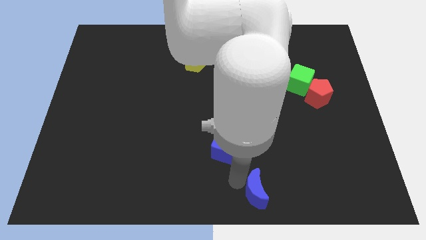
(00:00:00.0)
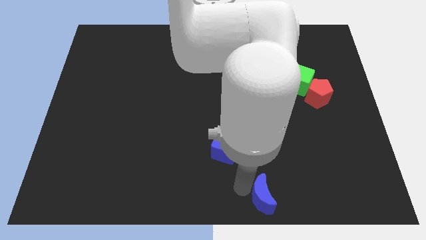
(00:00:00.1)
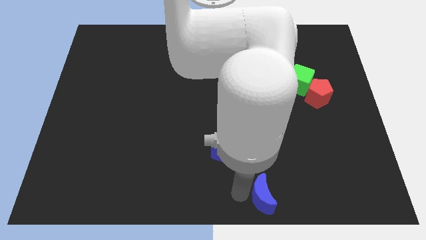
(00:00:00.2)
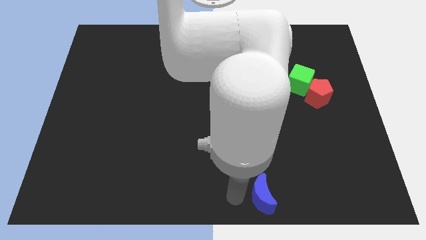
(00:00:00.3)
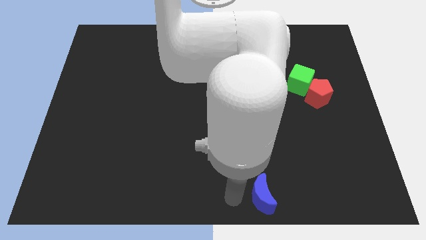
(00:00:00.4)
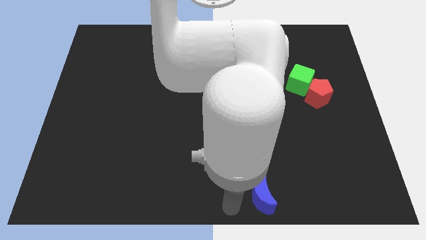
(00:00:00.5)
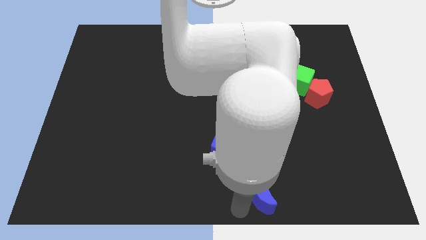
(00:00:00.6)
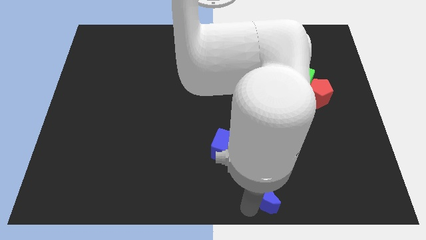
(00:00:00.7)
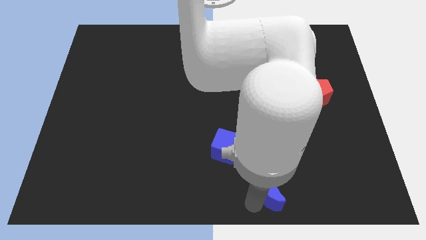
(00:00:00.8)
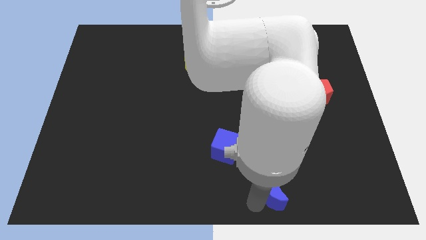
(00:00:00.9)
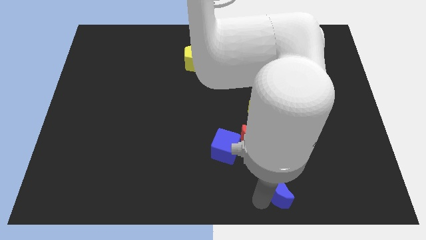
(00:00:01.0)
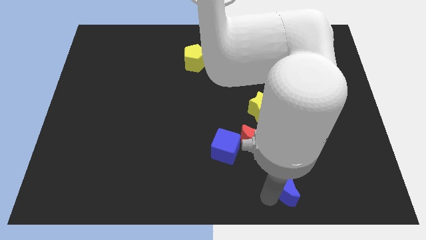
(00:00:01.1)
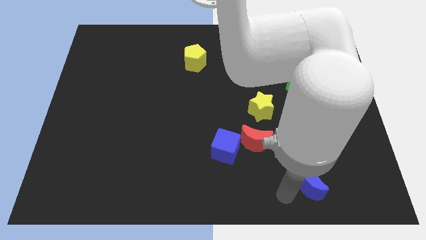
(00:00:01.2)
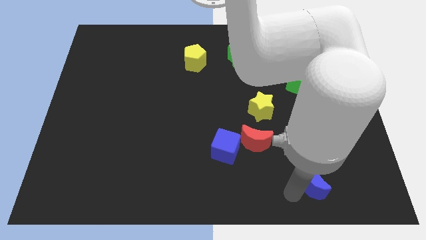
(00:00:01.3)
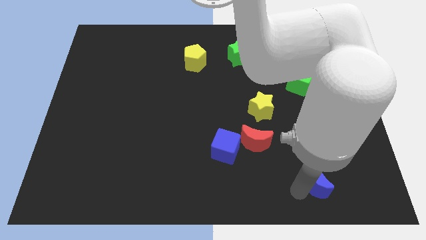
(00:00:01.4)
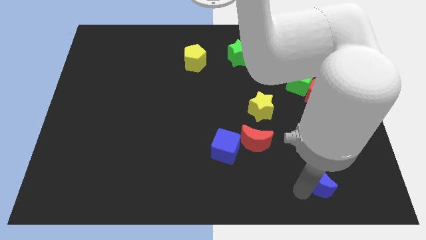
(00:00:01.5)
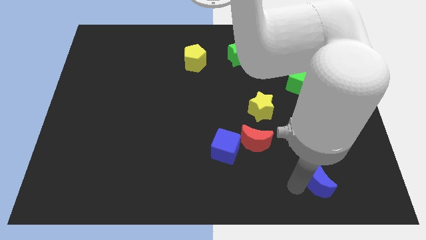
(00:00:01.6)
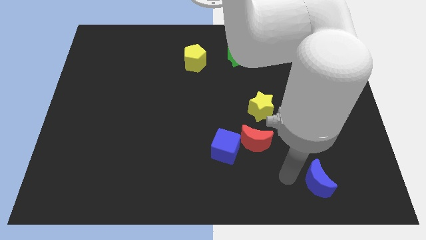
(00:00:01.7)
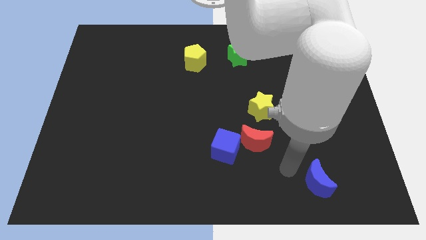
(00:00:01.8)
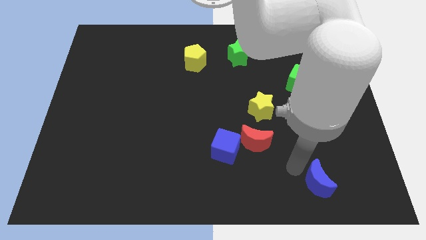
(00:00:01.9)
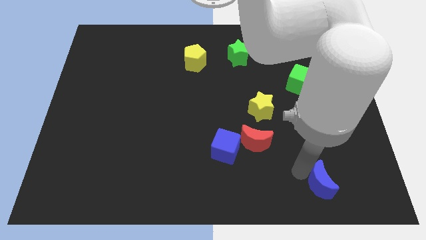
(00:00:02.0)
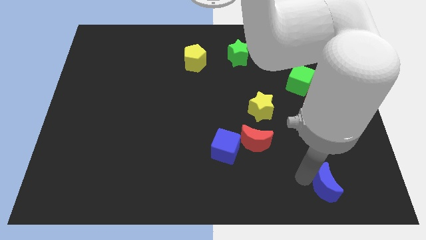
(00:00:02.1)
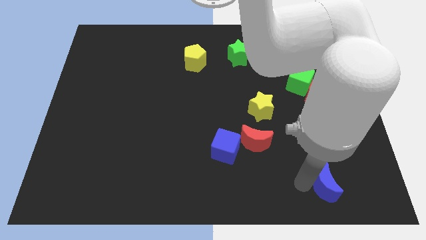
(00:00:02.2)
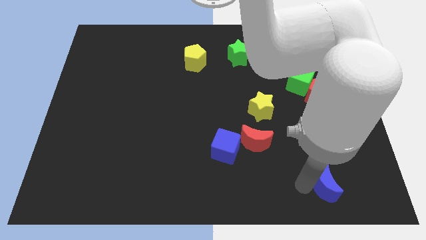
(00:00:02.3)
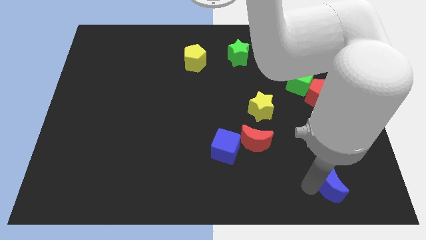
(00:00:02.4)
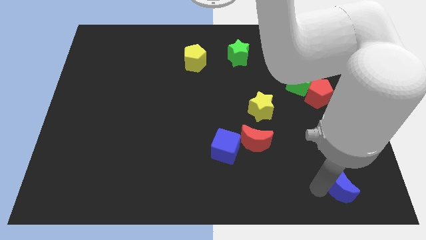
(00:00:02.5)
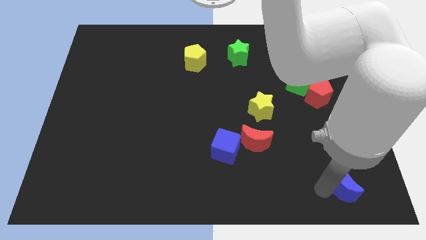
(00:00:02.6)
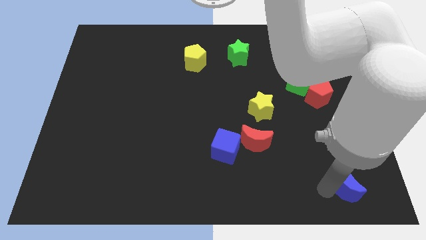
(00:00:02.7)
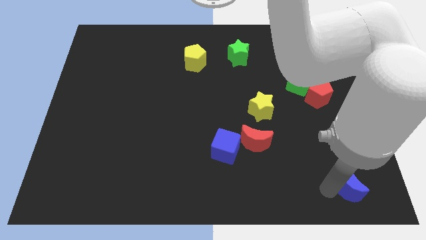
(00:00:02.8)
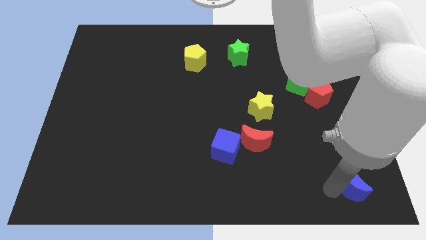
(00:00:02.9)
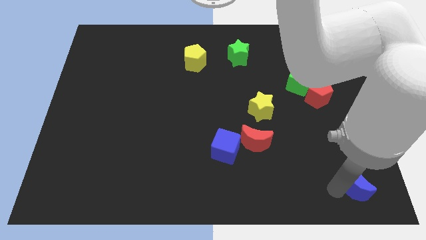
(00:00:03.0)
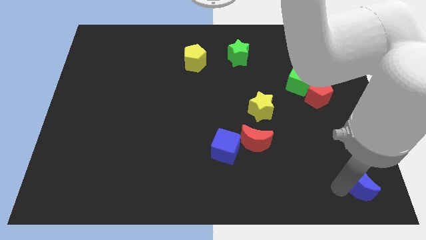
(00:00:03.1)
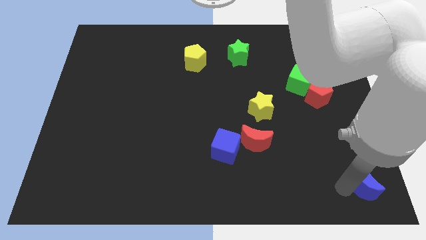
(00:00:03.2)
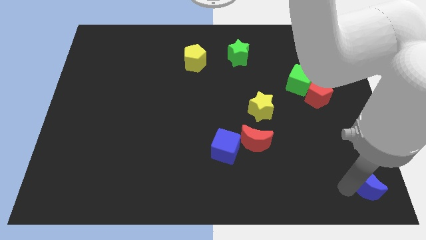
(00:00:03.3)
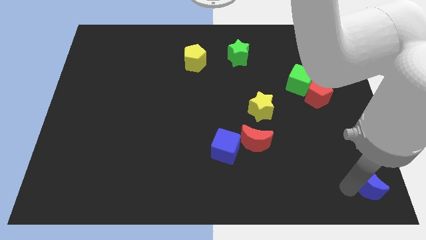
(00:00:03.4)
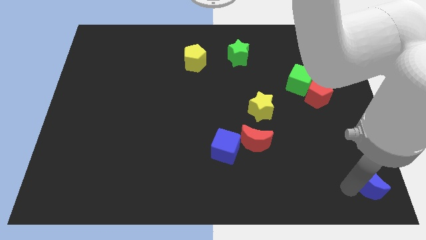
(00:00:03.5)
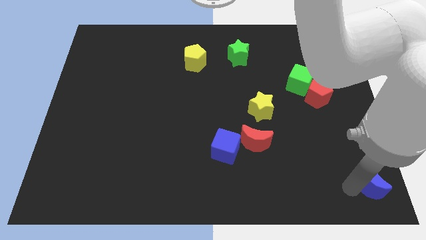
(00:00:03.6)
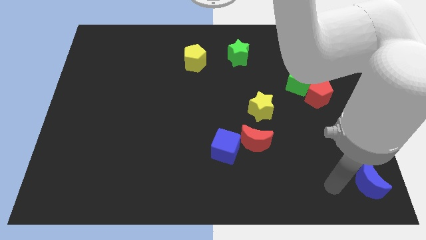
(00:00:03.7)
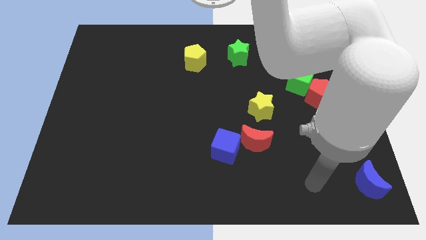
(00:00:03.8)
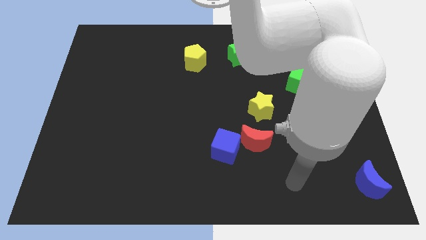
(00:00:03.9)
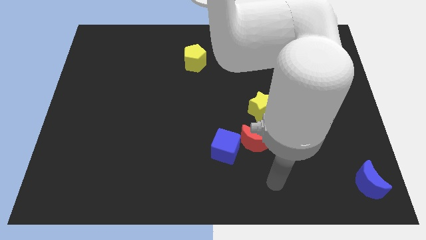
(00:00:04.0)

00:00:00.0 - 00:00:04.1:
slide blue moon to the bottom right

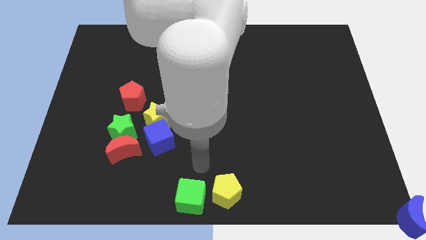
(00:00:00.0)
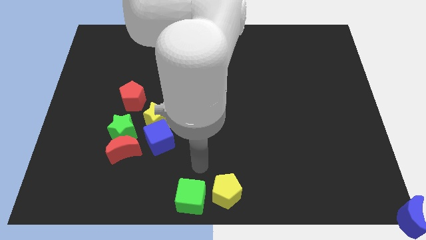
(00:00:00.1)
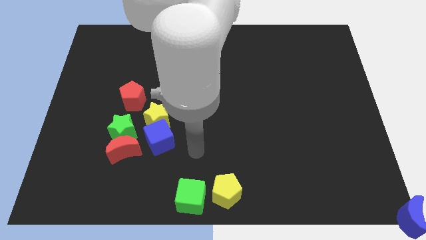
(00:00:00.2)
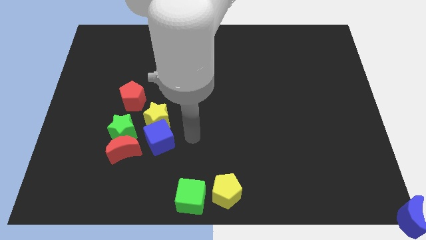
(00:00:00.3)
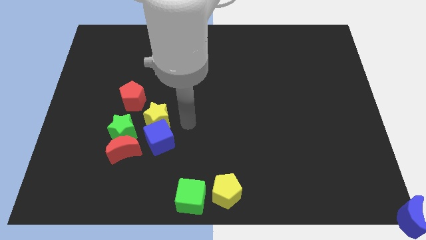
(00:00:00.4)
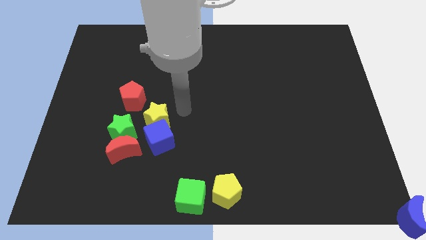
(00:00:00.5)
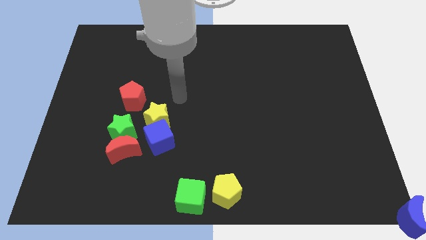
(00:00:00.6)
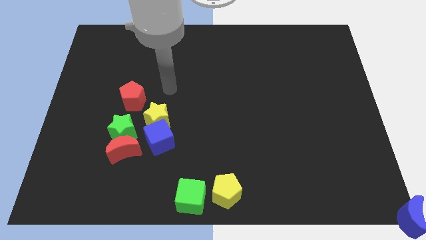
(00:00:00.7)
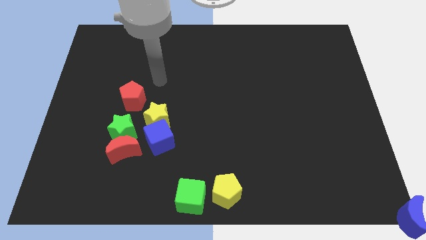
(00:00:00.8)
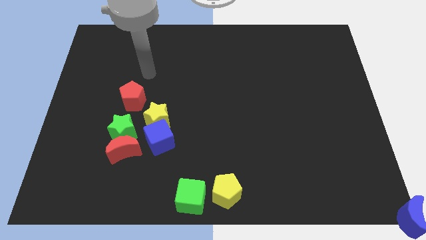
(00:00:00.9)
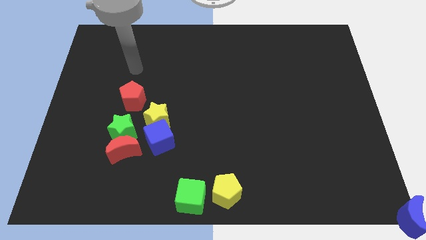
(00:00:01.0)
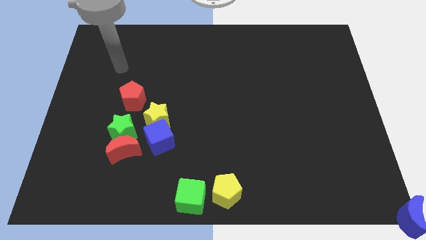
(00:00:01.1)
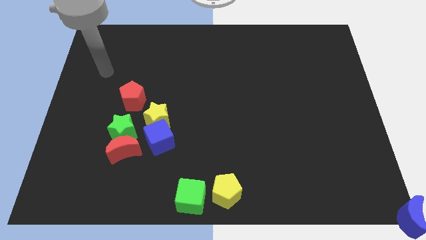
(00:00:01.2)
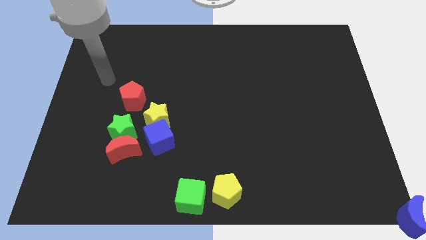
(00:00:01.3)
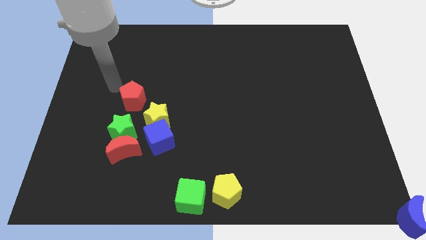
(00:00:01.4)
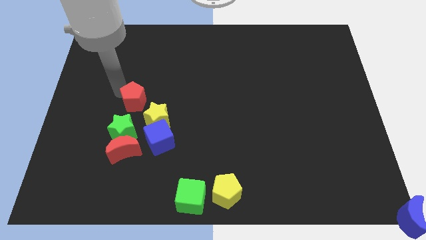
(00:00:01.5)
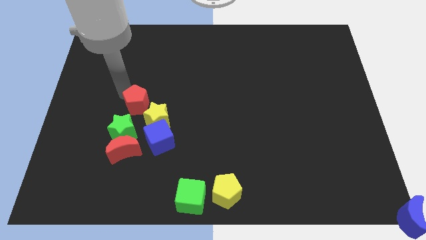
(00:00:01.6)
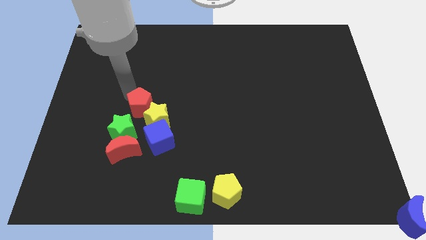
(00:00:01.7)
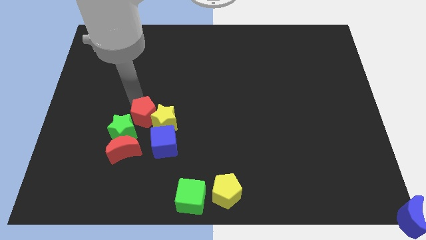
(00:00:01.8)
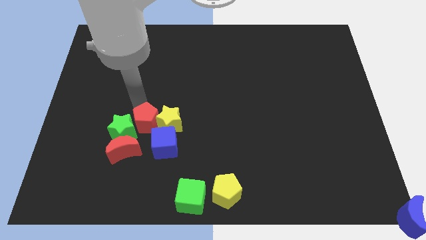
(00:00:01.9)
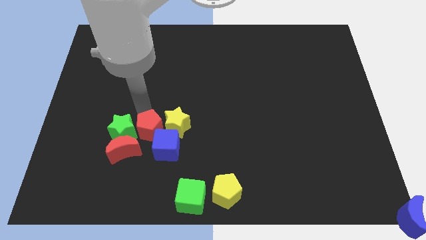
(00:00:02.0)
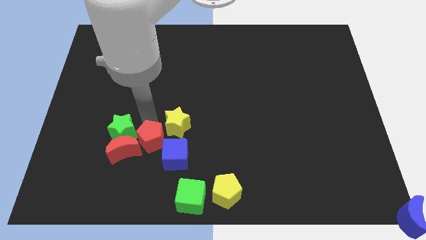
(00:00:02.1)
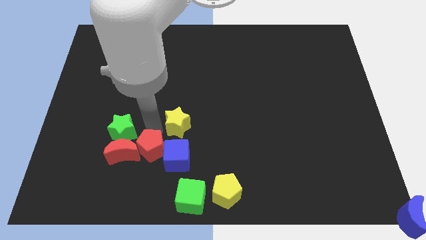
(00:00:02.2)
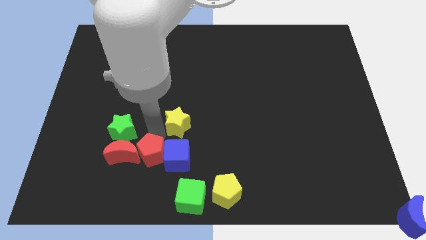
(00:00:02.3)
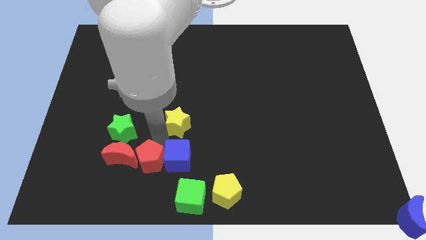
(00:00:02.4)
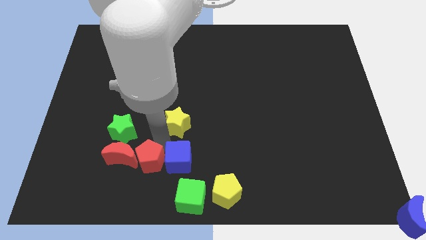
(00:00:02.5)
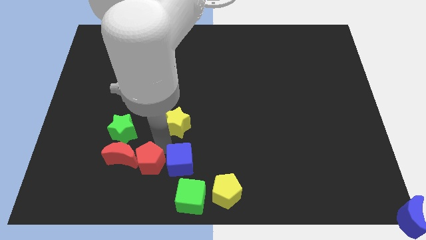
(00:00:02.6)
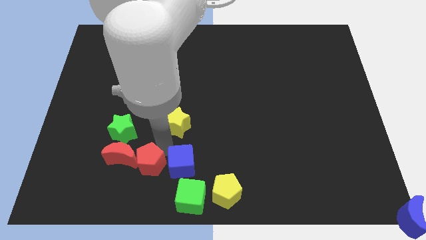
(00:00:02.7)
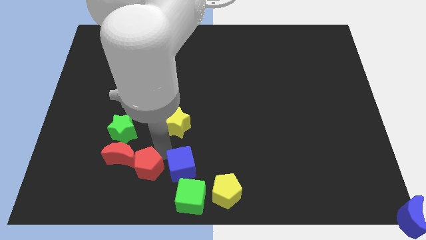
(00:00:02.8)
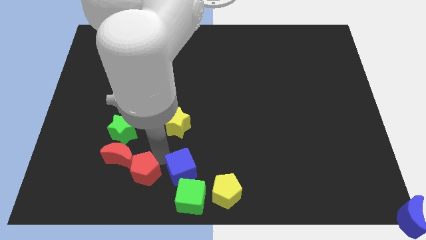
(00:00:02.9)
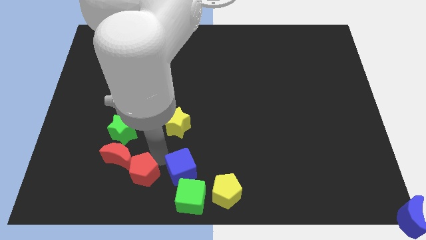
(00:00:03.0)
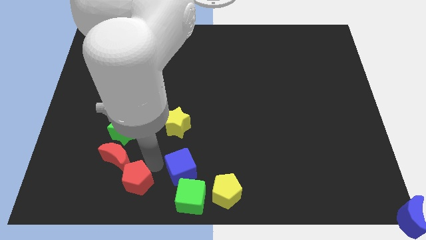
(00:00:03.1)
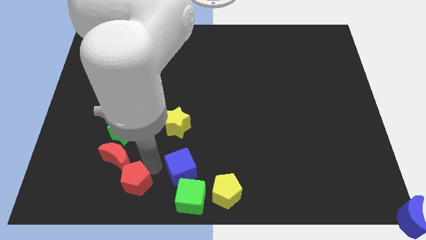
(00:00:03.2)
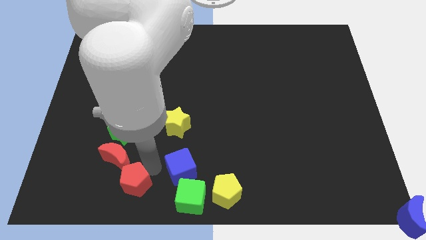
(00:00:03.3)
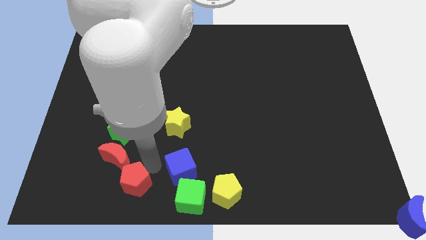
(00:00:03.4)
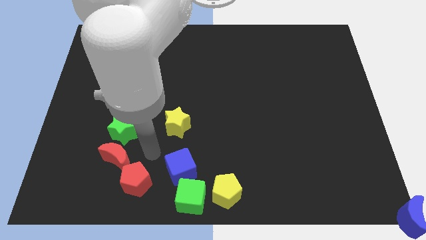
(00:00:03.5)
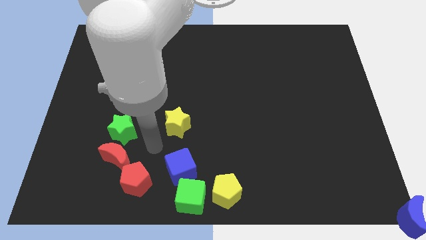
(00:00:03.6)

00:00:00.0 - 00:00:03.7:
move the red pentagon to the bottom right of the red crescent

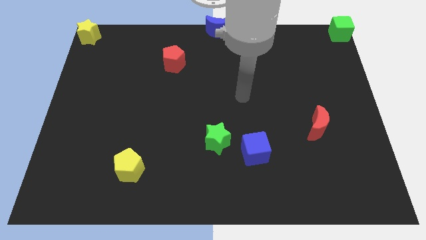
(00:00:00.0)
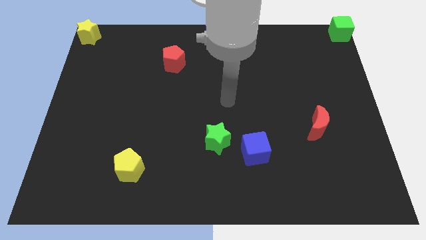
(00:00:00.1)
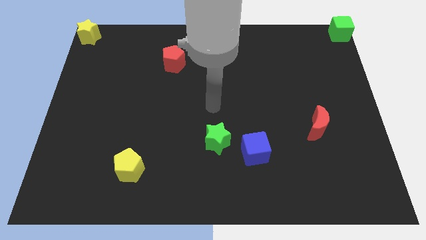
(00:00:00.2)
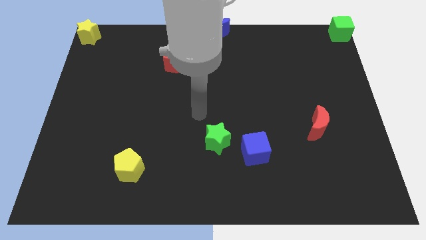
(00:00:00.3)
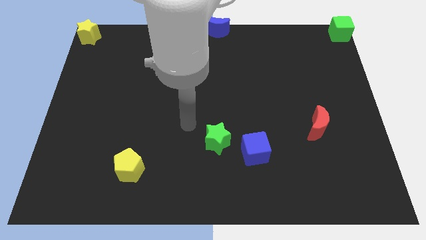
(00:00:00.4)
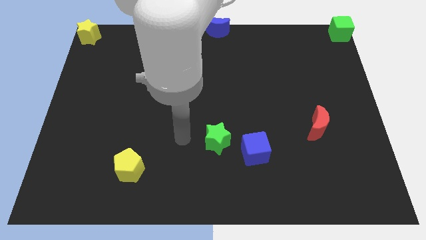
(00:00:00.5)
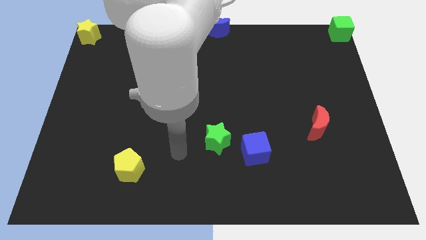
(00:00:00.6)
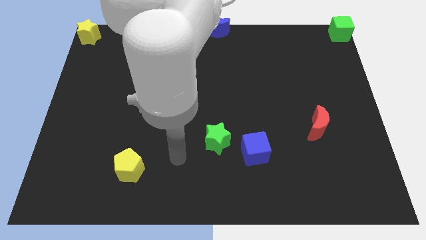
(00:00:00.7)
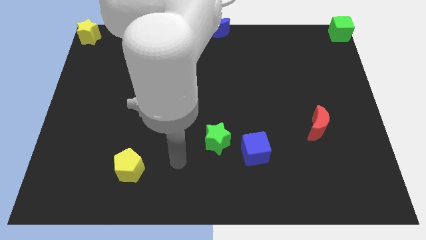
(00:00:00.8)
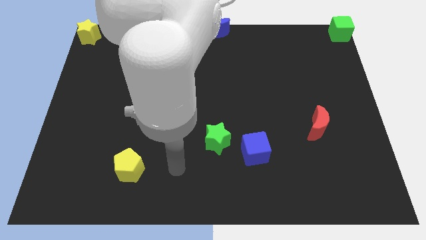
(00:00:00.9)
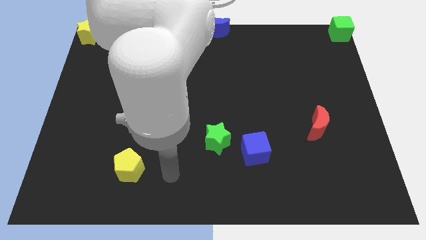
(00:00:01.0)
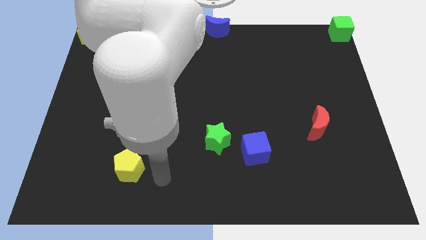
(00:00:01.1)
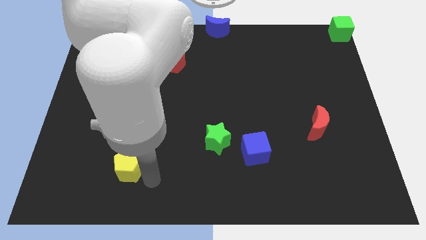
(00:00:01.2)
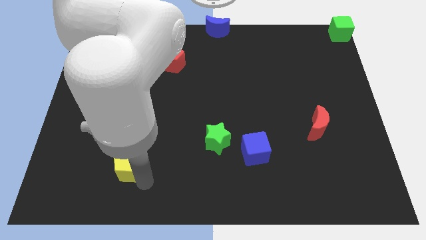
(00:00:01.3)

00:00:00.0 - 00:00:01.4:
move your arm to the bottom side of the yellow pentagon
